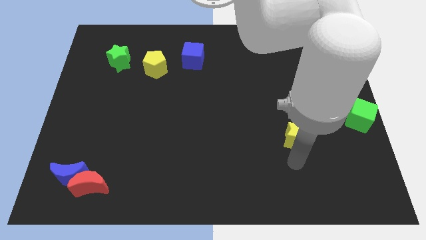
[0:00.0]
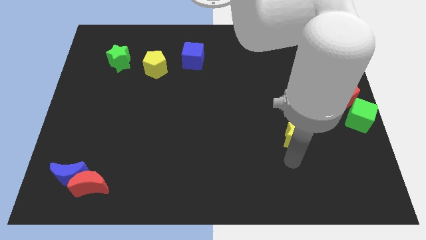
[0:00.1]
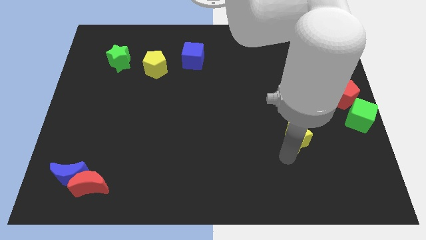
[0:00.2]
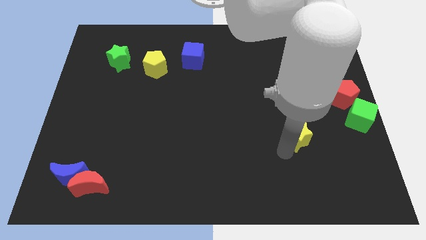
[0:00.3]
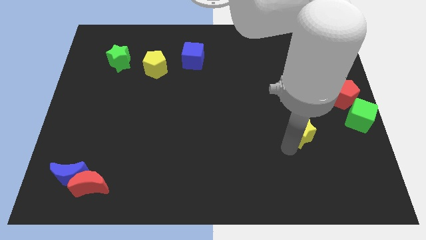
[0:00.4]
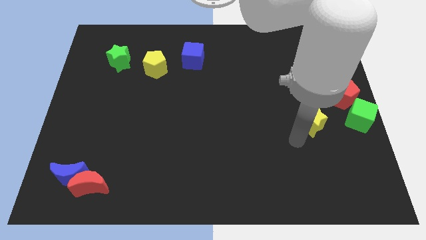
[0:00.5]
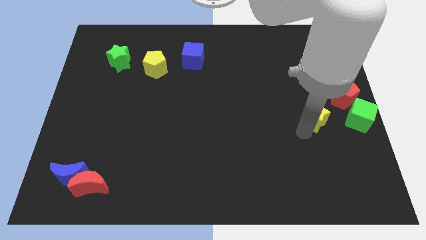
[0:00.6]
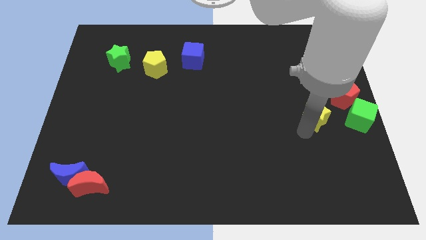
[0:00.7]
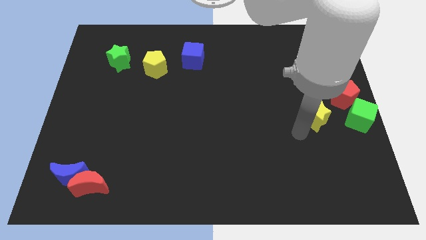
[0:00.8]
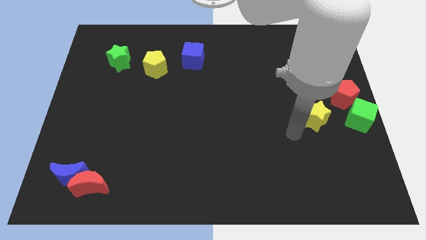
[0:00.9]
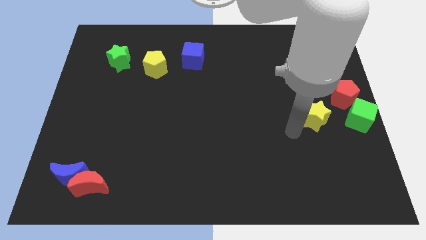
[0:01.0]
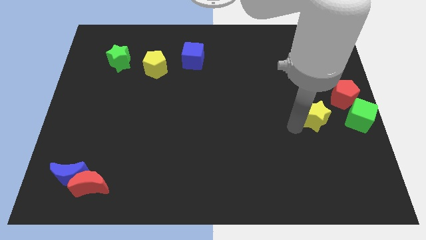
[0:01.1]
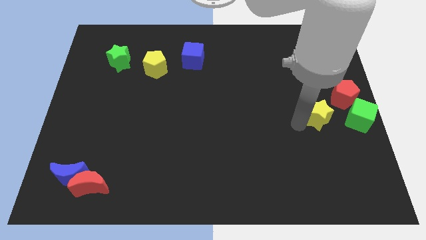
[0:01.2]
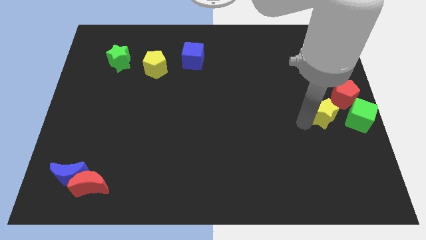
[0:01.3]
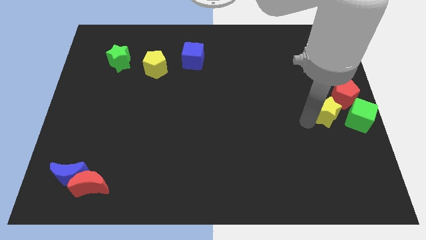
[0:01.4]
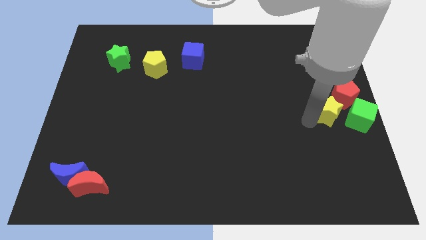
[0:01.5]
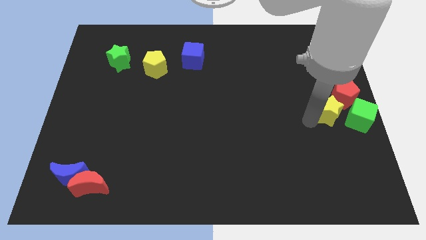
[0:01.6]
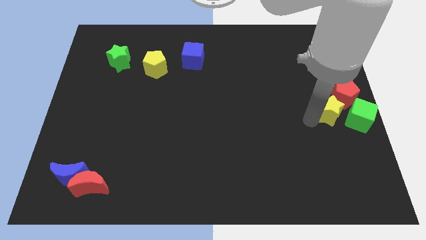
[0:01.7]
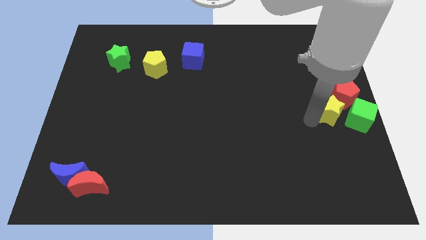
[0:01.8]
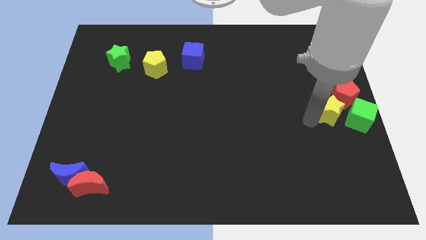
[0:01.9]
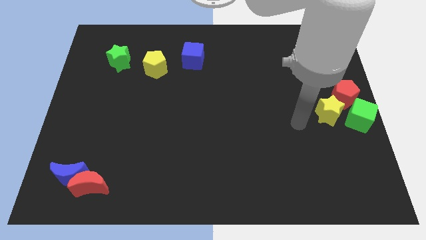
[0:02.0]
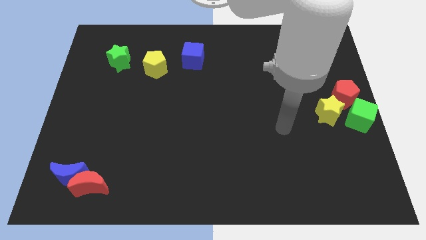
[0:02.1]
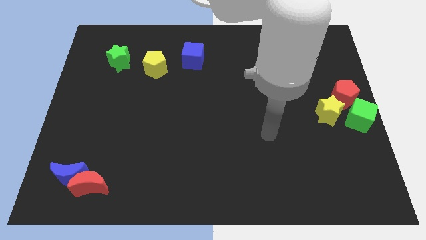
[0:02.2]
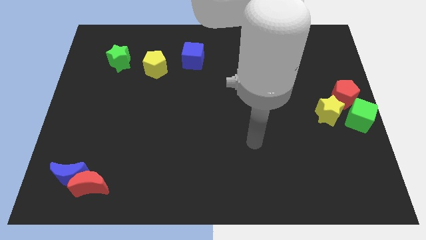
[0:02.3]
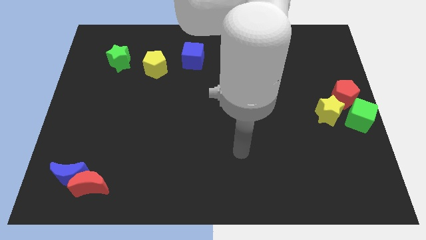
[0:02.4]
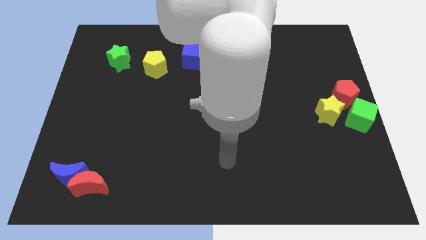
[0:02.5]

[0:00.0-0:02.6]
push the yellow star into the red pentagon

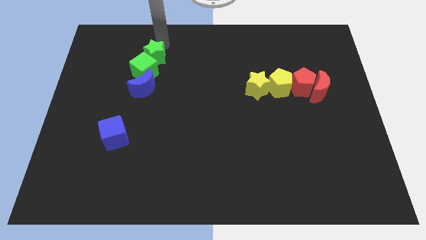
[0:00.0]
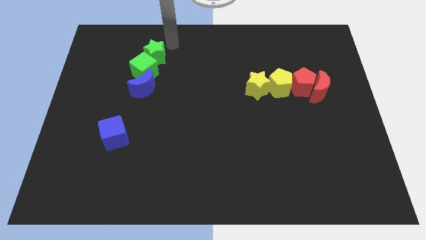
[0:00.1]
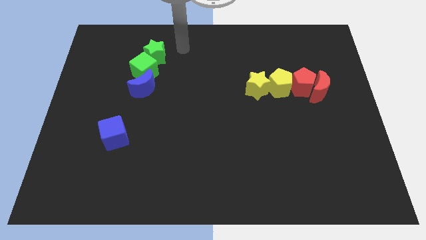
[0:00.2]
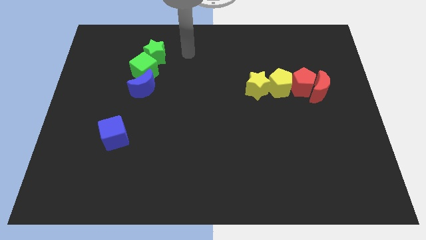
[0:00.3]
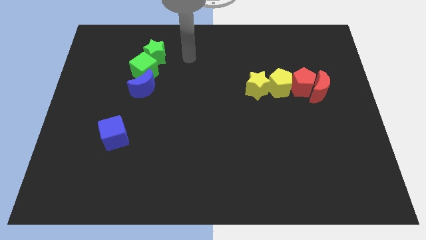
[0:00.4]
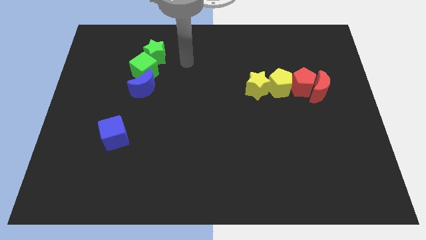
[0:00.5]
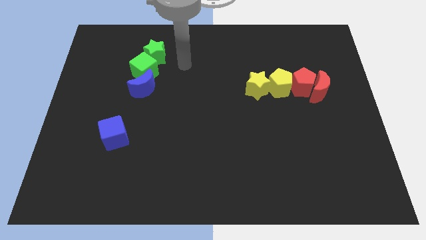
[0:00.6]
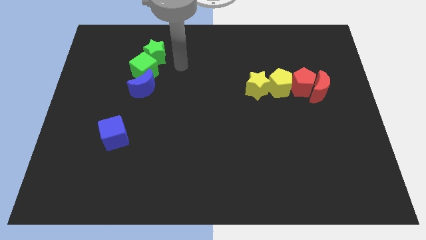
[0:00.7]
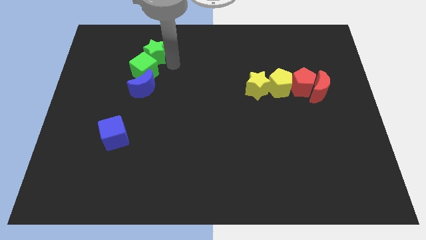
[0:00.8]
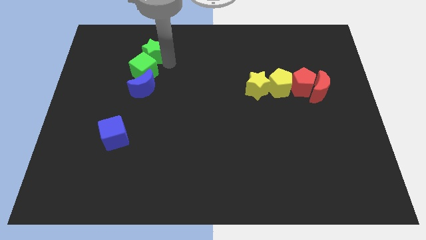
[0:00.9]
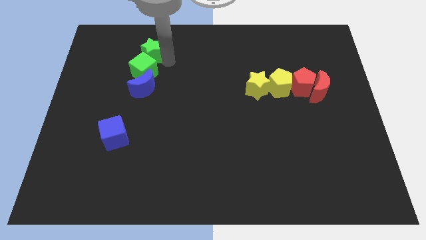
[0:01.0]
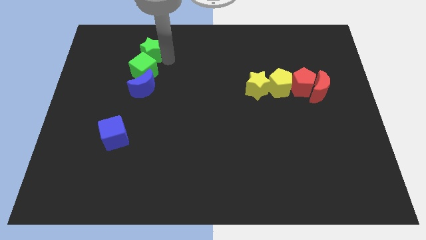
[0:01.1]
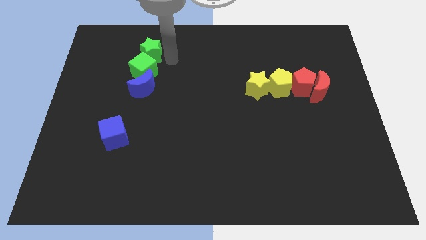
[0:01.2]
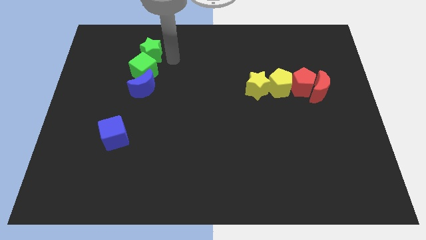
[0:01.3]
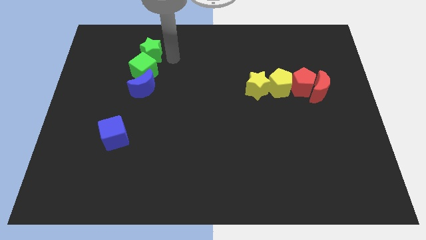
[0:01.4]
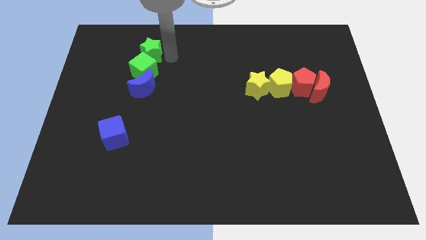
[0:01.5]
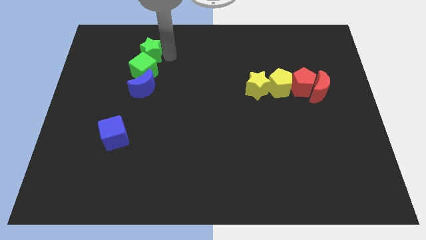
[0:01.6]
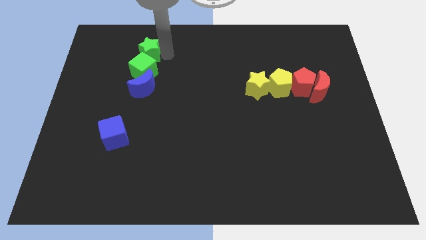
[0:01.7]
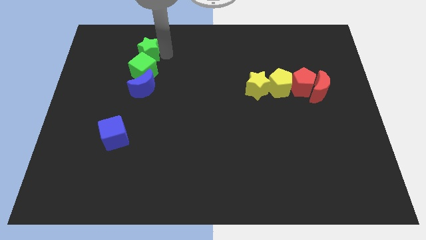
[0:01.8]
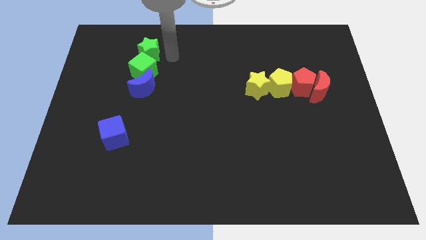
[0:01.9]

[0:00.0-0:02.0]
move the green star slightly to the left

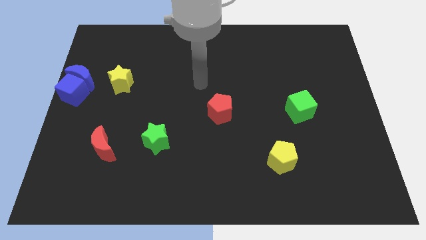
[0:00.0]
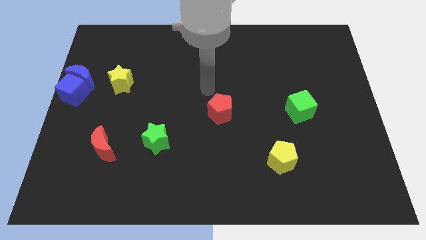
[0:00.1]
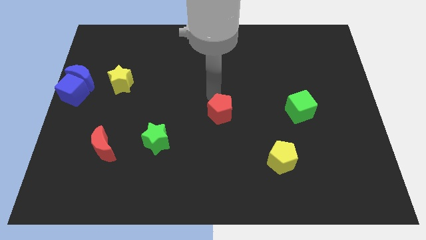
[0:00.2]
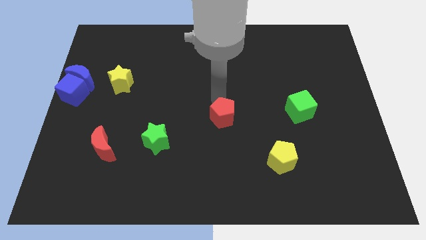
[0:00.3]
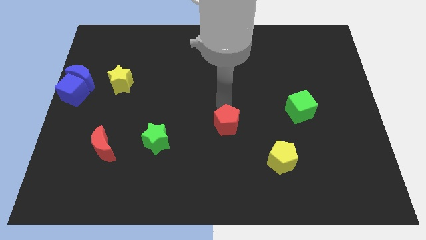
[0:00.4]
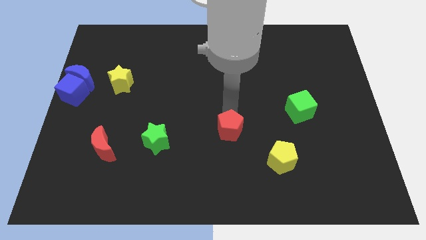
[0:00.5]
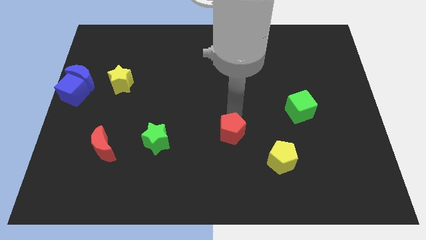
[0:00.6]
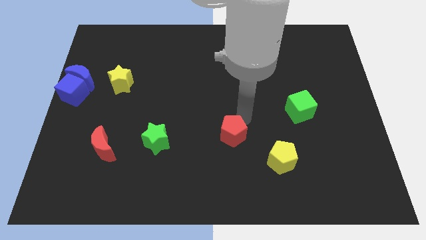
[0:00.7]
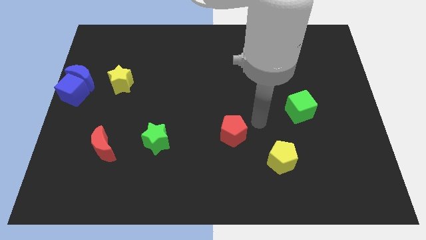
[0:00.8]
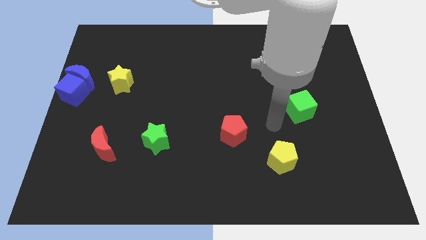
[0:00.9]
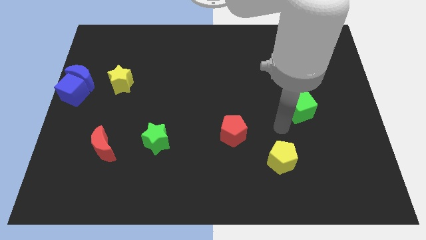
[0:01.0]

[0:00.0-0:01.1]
push the red pentagon to the bottom of the board

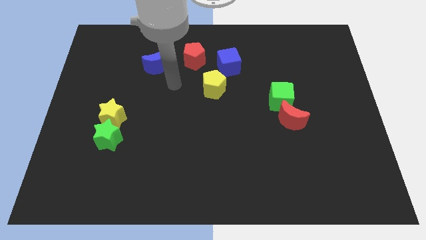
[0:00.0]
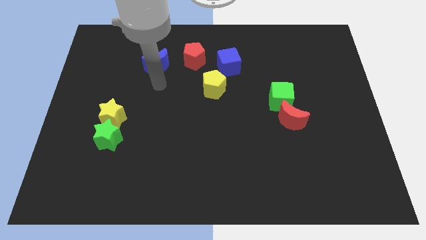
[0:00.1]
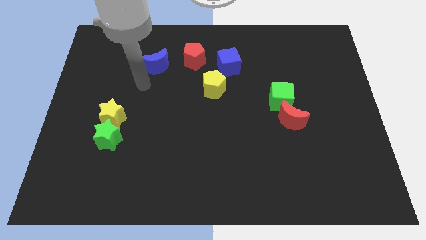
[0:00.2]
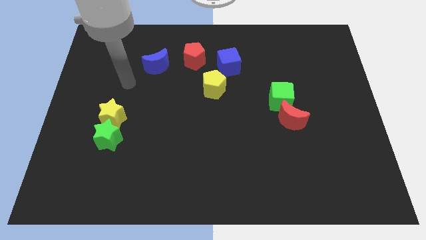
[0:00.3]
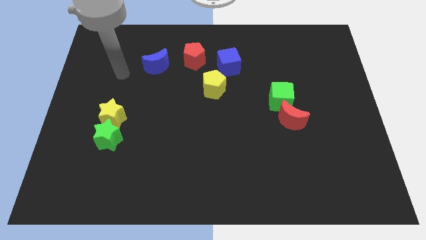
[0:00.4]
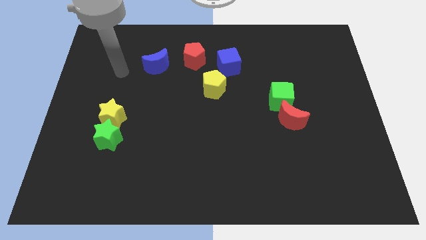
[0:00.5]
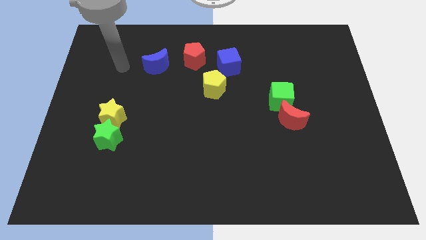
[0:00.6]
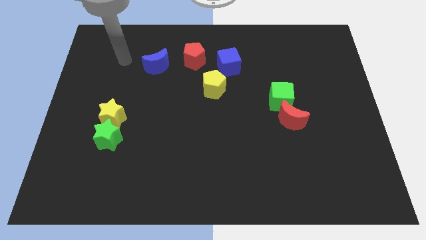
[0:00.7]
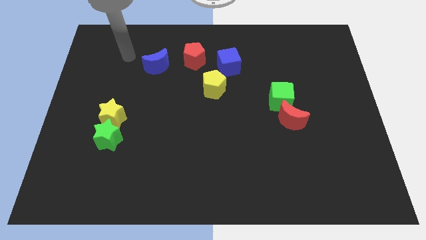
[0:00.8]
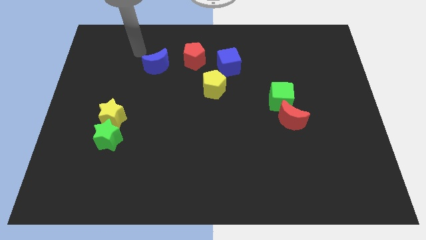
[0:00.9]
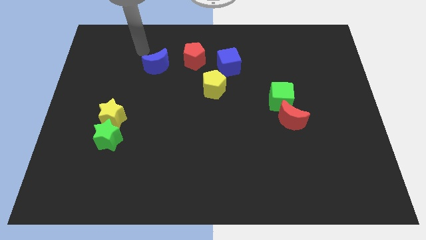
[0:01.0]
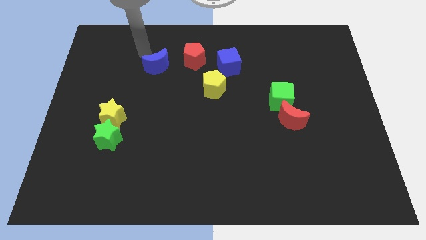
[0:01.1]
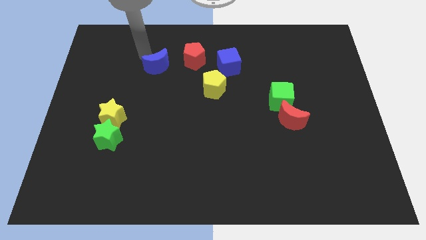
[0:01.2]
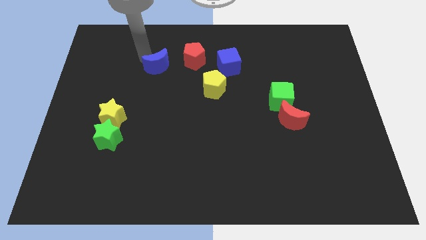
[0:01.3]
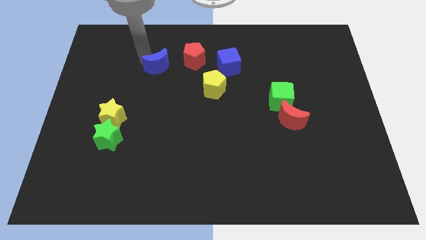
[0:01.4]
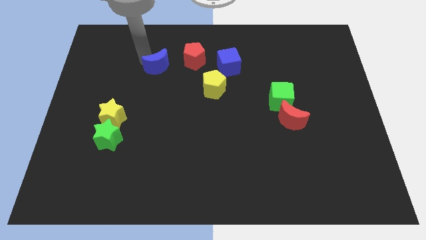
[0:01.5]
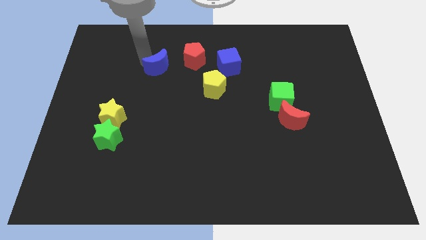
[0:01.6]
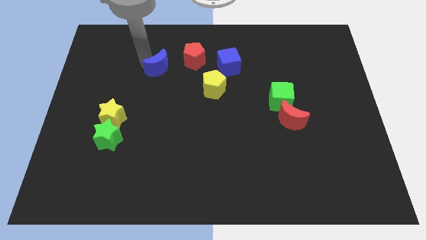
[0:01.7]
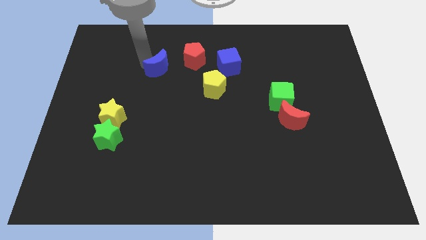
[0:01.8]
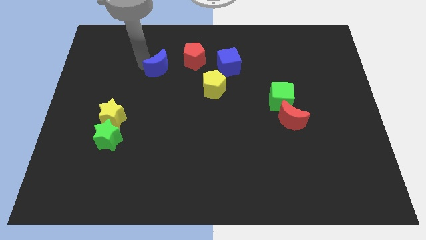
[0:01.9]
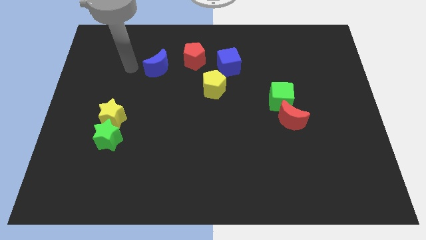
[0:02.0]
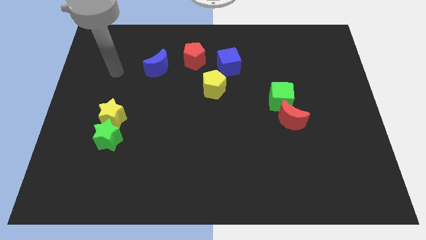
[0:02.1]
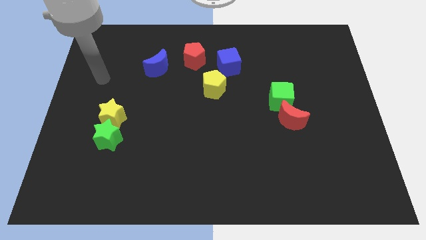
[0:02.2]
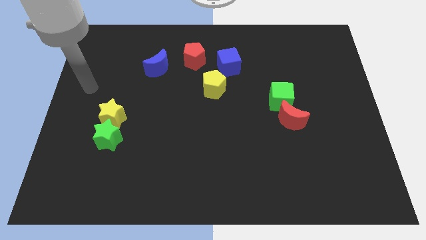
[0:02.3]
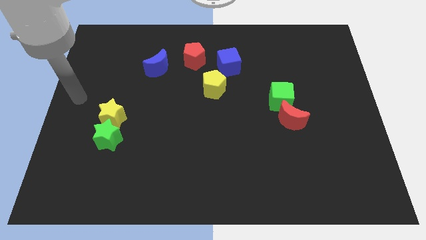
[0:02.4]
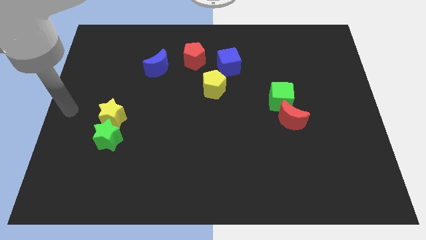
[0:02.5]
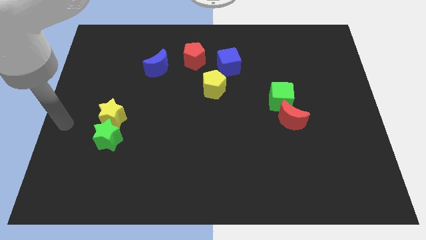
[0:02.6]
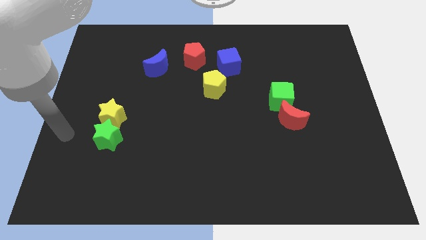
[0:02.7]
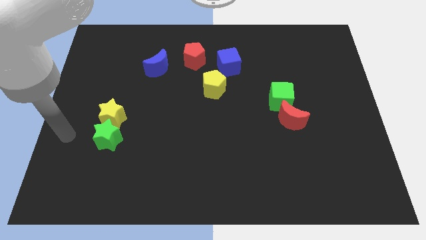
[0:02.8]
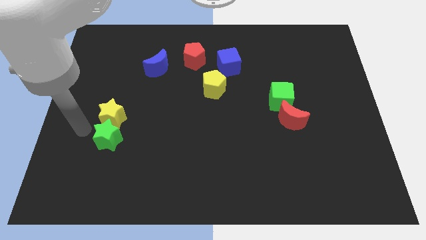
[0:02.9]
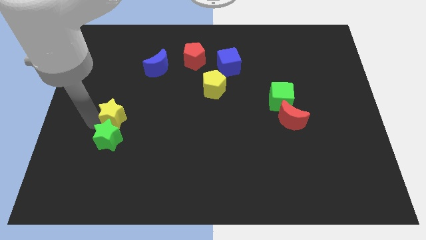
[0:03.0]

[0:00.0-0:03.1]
slide the blue cube to the bottom left side of the red pentagon
